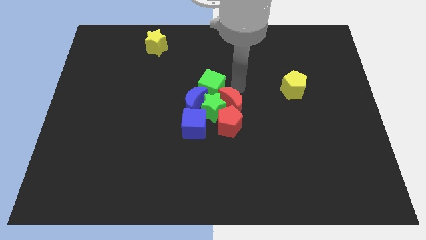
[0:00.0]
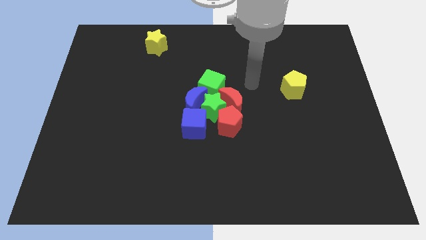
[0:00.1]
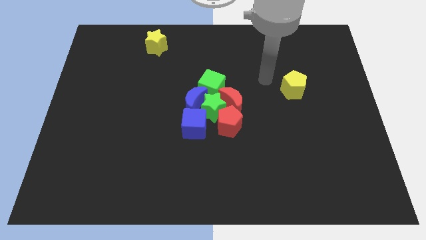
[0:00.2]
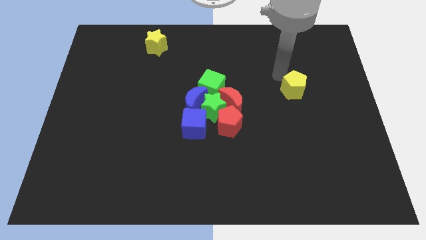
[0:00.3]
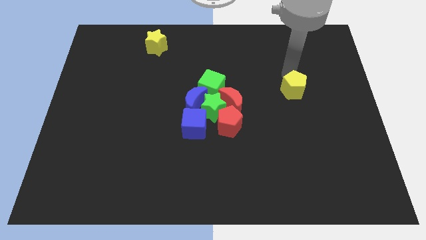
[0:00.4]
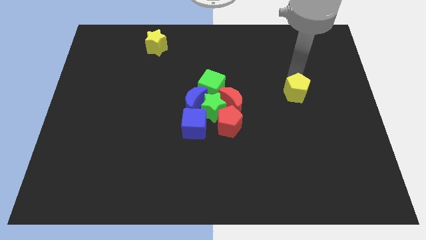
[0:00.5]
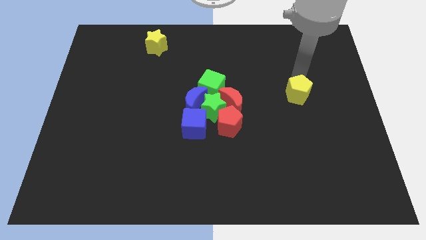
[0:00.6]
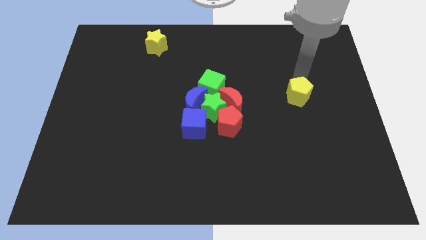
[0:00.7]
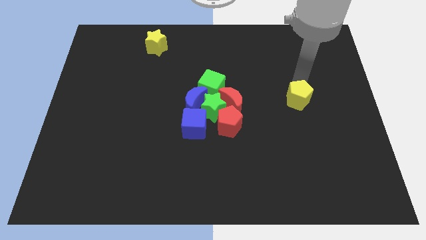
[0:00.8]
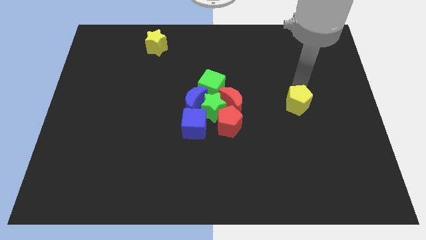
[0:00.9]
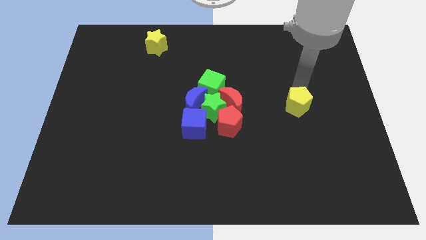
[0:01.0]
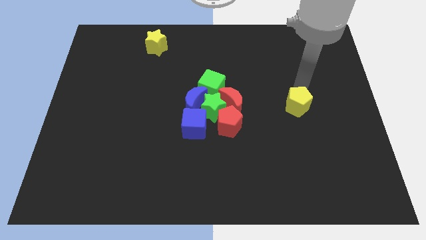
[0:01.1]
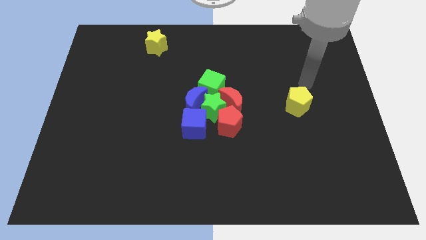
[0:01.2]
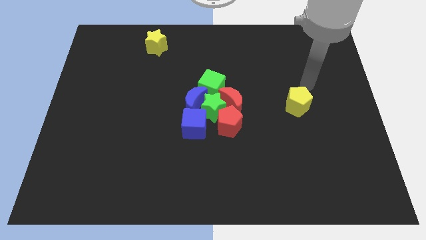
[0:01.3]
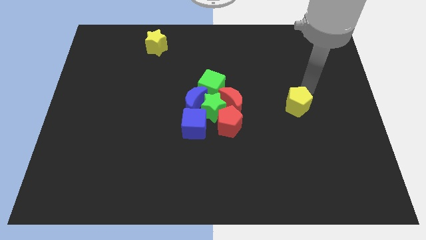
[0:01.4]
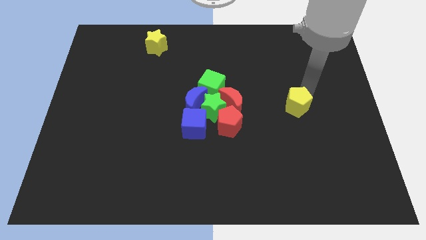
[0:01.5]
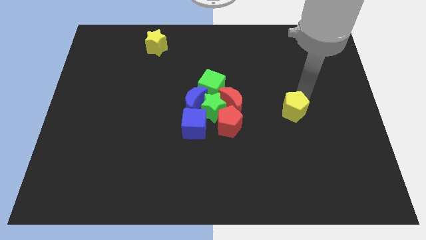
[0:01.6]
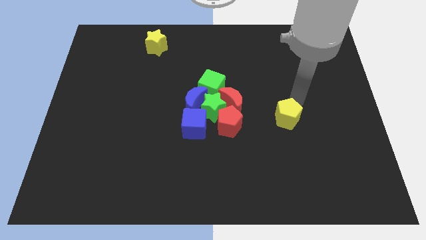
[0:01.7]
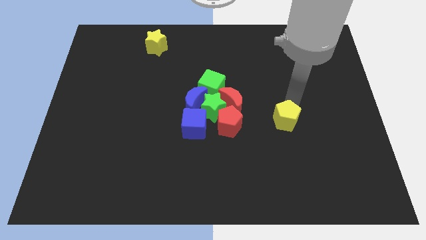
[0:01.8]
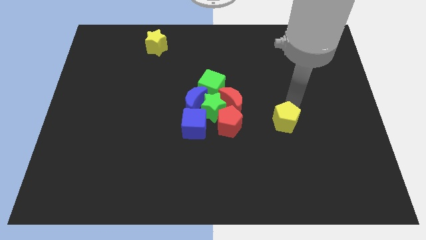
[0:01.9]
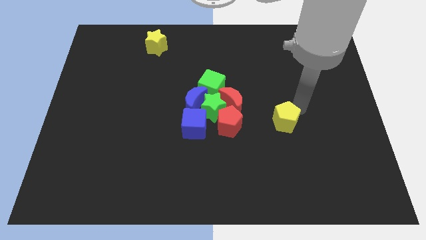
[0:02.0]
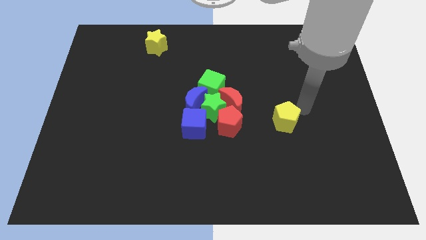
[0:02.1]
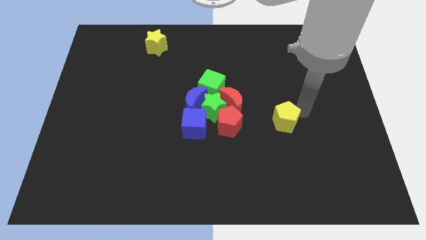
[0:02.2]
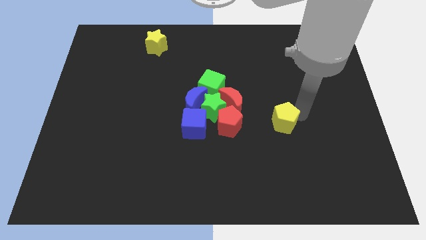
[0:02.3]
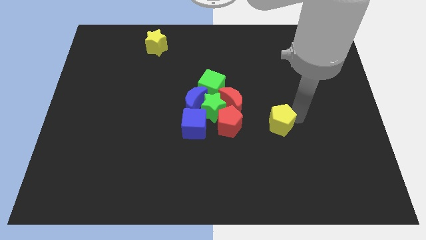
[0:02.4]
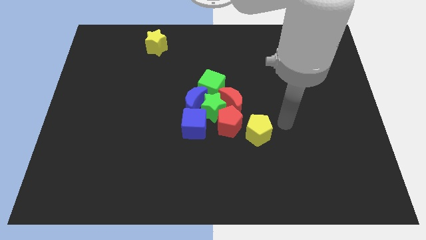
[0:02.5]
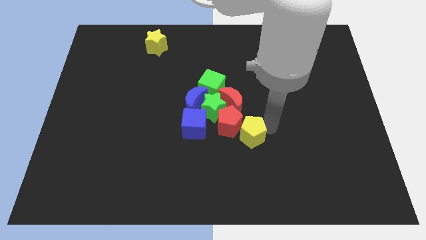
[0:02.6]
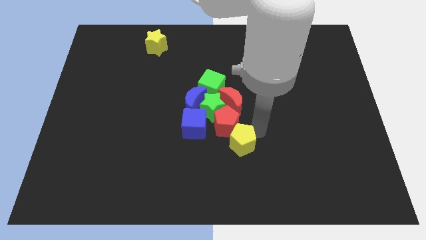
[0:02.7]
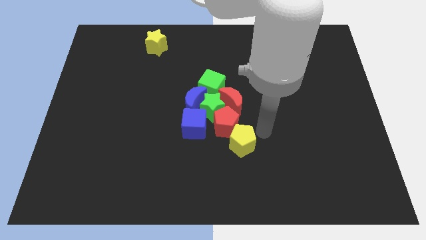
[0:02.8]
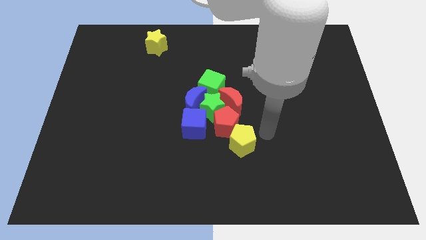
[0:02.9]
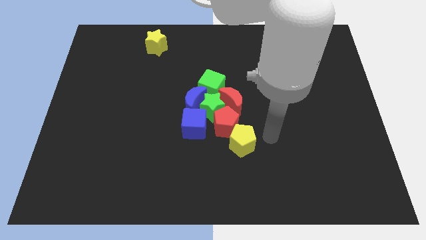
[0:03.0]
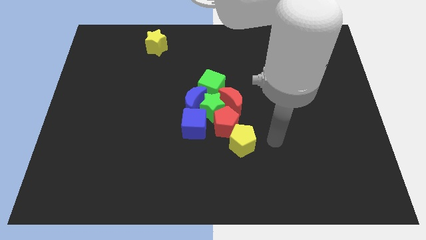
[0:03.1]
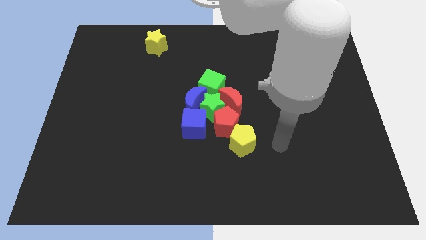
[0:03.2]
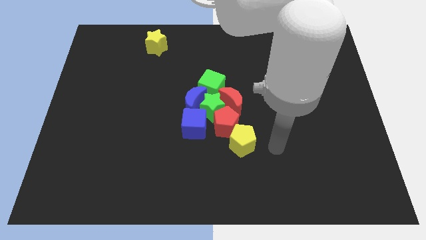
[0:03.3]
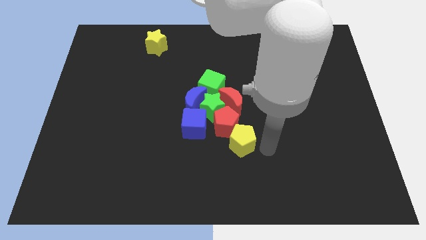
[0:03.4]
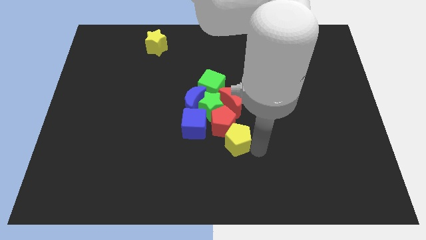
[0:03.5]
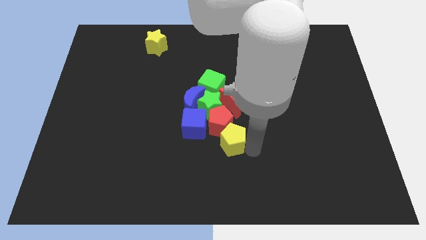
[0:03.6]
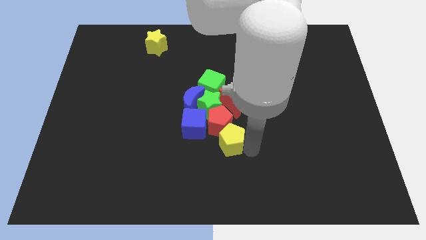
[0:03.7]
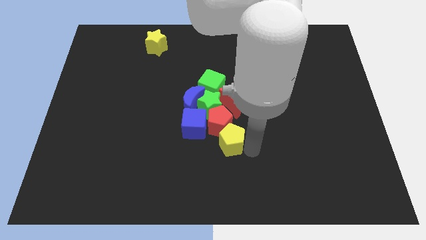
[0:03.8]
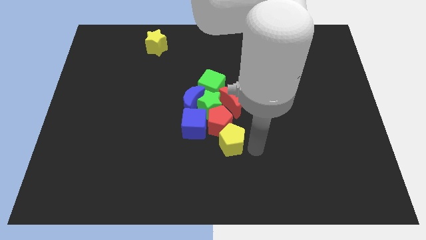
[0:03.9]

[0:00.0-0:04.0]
move the yellow pentagon below the red pentagon

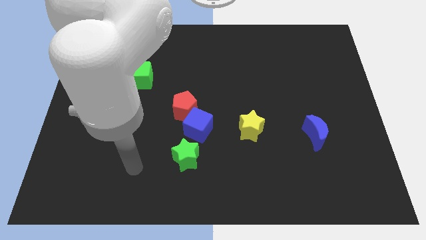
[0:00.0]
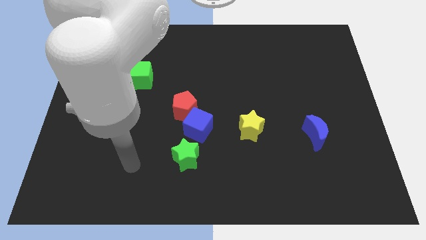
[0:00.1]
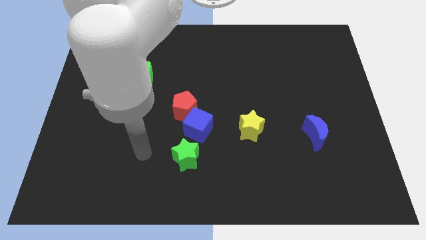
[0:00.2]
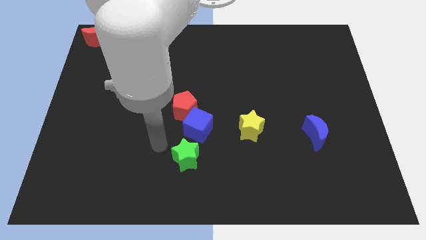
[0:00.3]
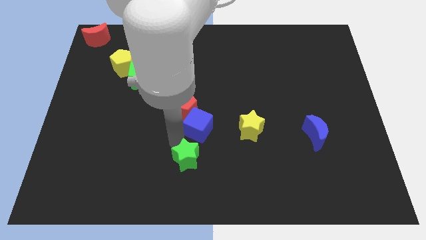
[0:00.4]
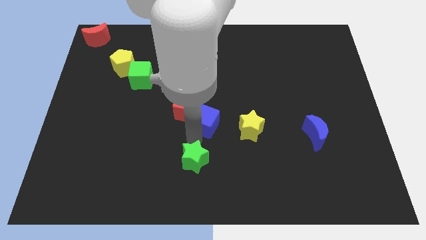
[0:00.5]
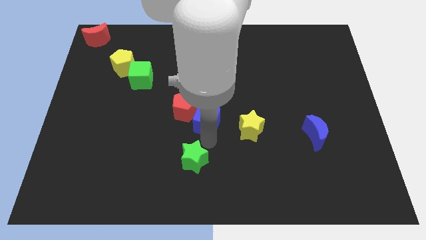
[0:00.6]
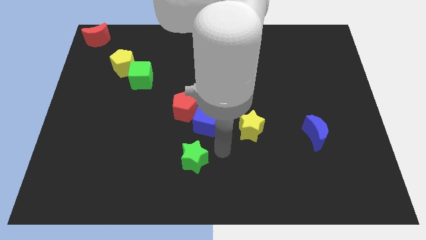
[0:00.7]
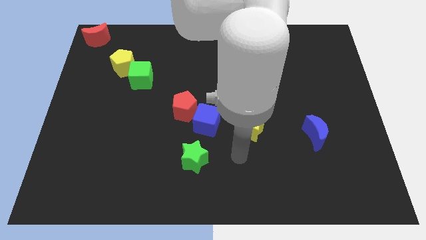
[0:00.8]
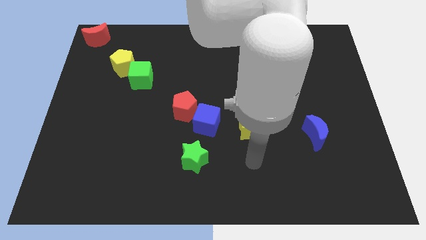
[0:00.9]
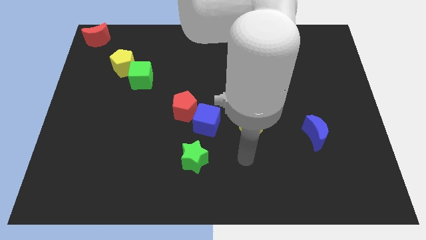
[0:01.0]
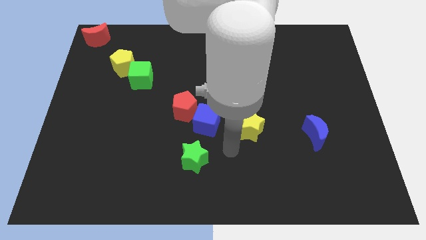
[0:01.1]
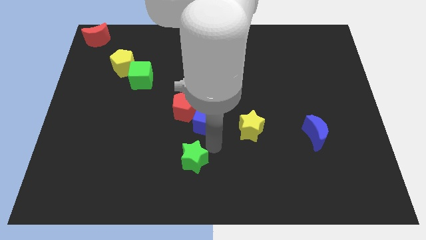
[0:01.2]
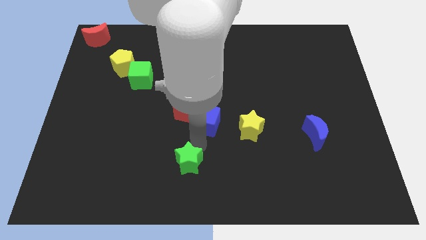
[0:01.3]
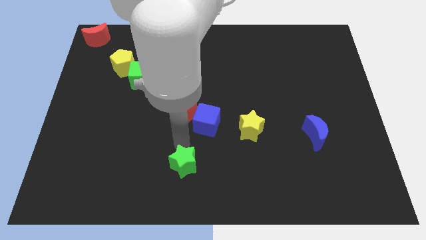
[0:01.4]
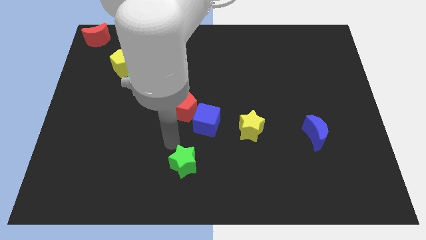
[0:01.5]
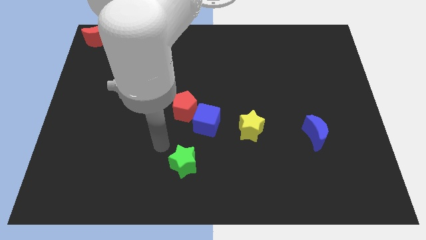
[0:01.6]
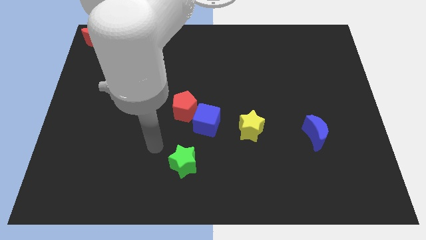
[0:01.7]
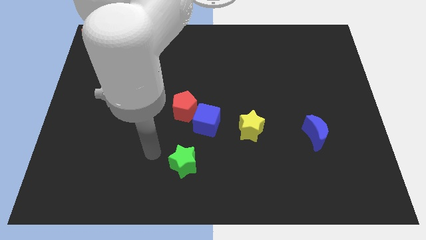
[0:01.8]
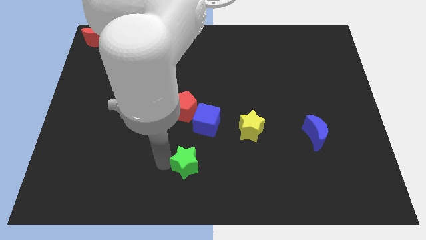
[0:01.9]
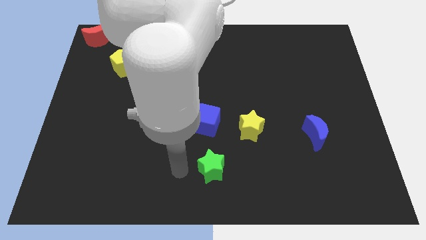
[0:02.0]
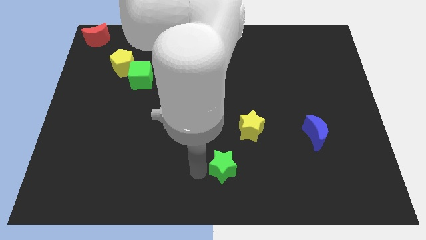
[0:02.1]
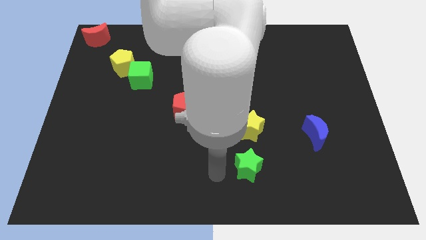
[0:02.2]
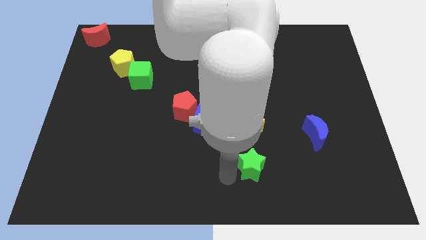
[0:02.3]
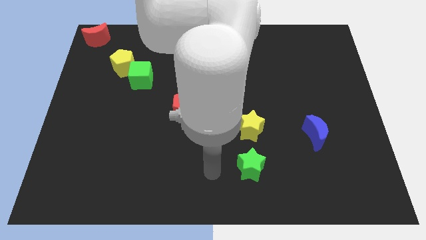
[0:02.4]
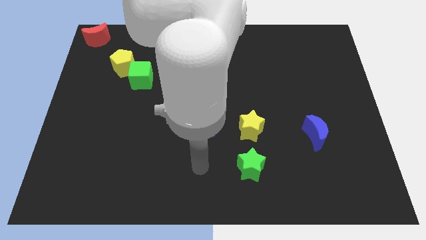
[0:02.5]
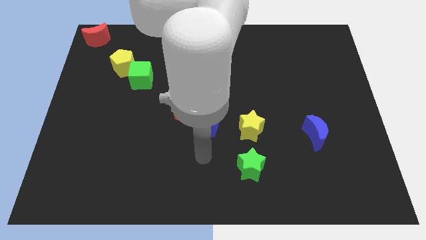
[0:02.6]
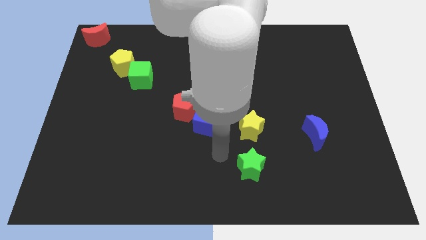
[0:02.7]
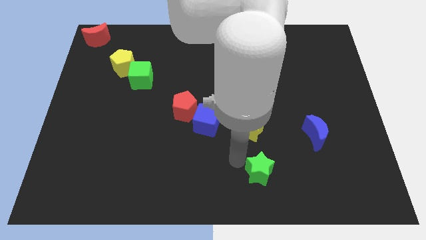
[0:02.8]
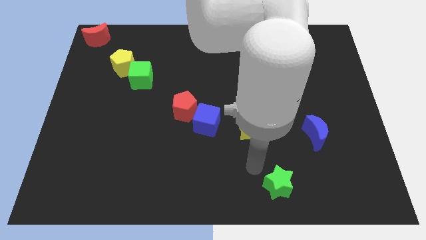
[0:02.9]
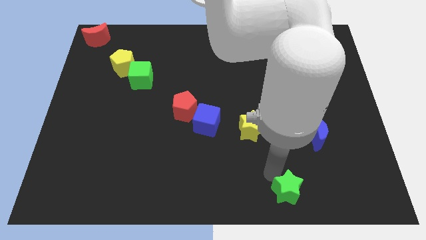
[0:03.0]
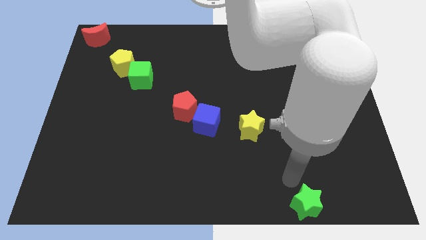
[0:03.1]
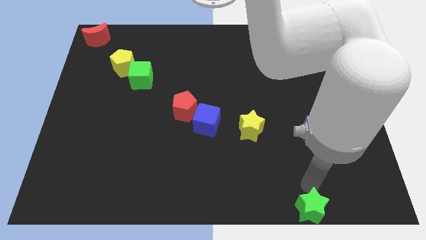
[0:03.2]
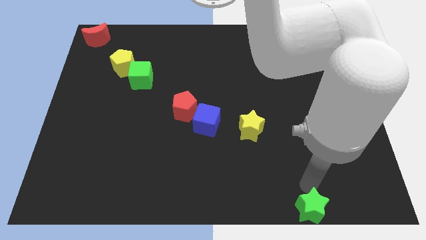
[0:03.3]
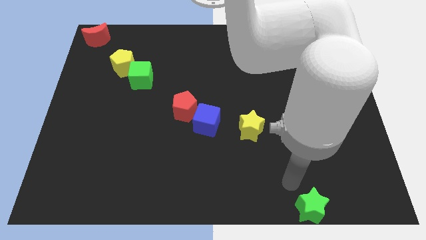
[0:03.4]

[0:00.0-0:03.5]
move the green star to the bottom side of the table

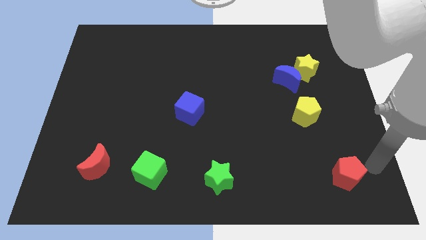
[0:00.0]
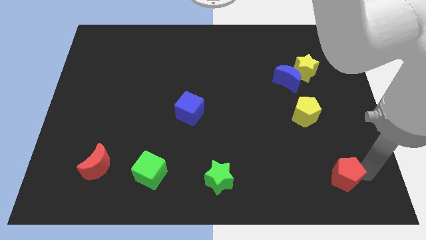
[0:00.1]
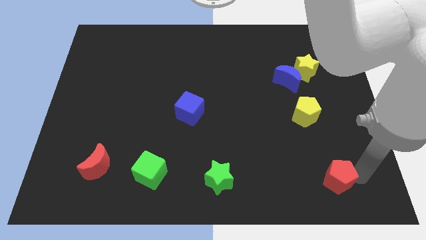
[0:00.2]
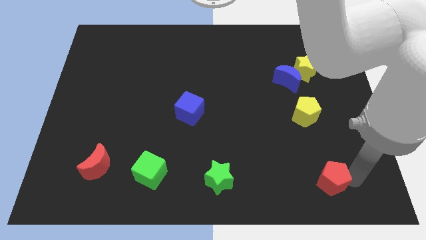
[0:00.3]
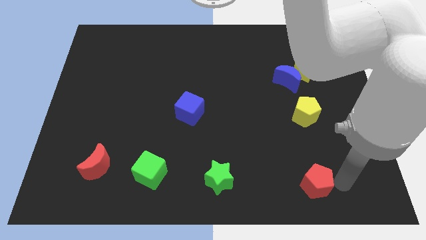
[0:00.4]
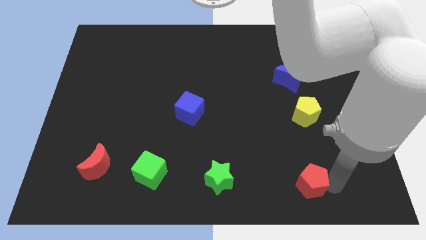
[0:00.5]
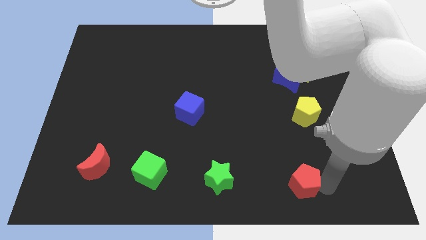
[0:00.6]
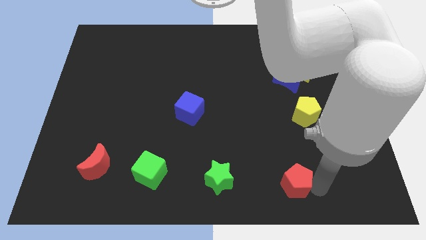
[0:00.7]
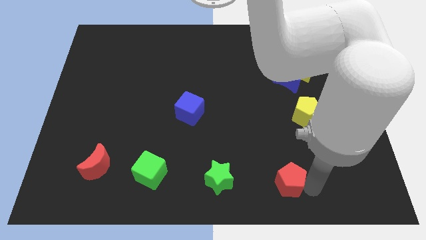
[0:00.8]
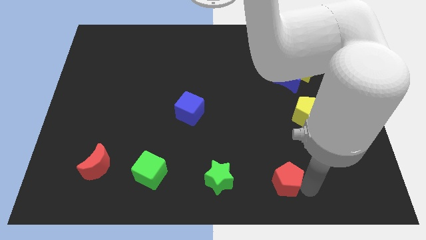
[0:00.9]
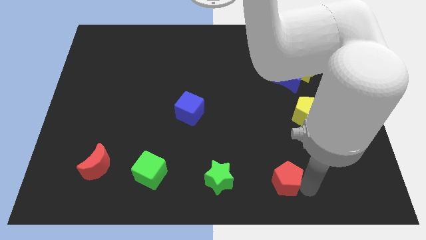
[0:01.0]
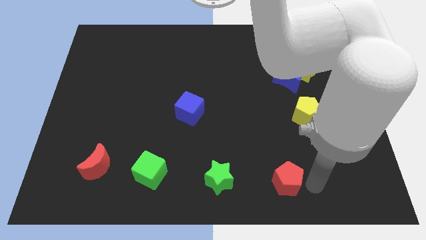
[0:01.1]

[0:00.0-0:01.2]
push the red pentagon slightly bottom left to the board

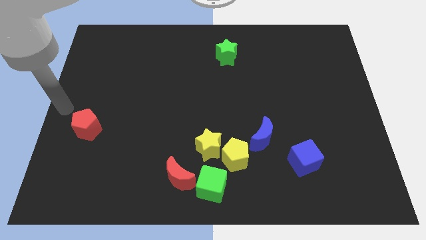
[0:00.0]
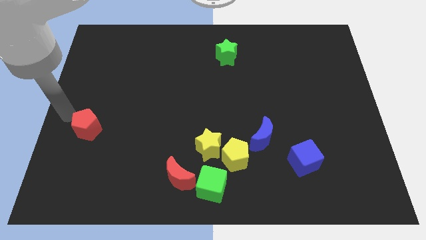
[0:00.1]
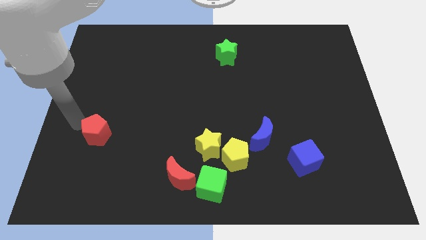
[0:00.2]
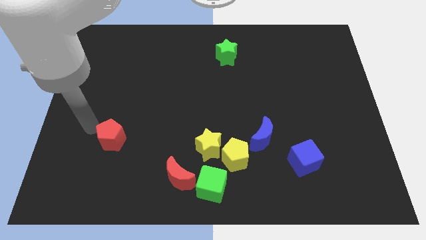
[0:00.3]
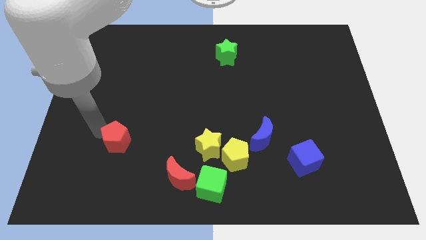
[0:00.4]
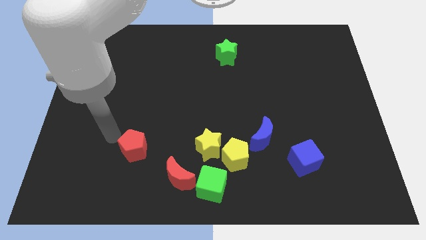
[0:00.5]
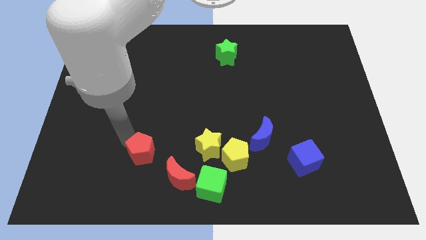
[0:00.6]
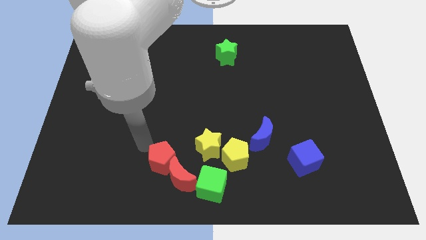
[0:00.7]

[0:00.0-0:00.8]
move the red pentagon into red moon
